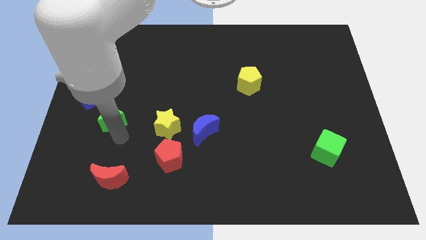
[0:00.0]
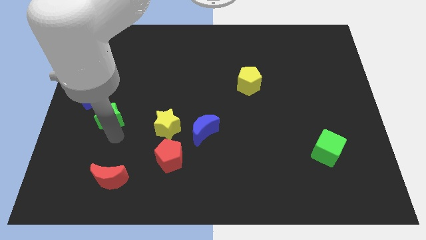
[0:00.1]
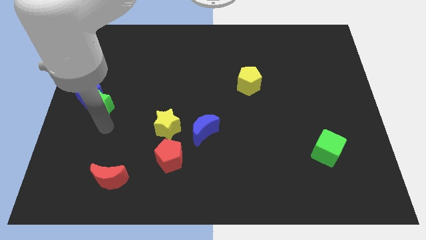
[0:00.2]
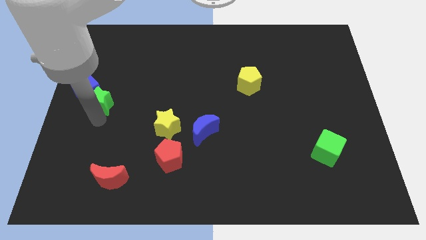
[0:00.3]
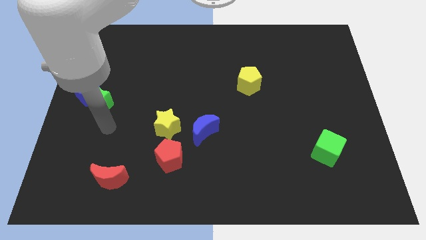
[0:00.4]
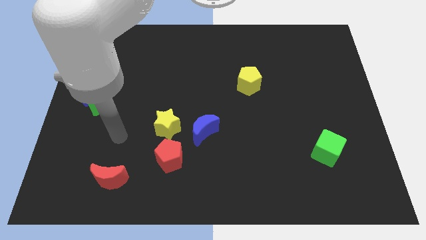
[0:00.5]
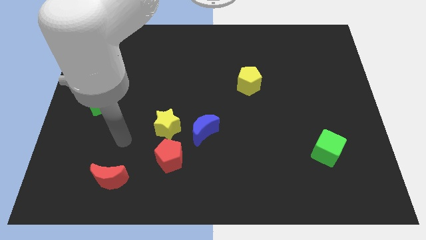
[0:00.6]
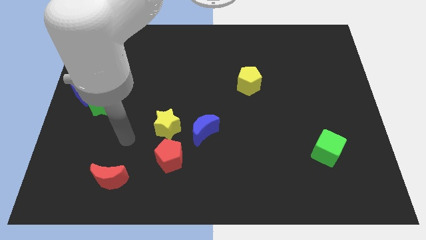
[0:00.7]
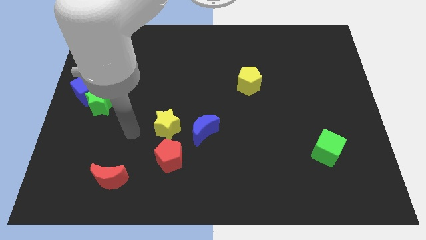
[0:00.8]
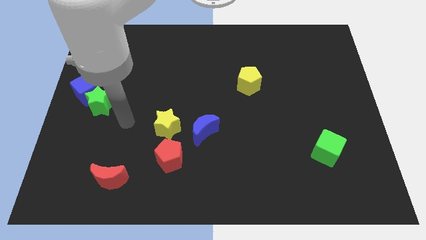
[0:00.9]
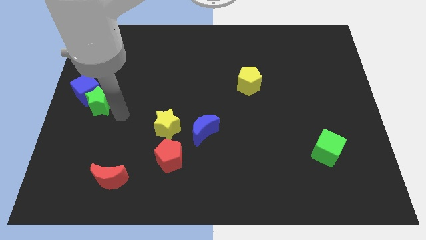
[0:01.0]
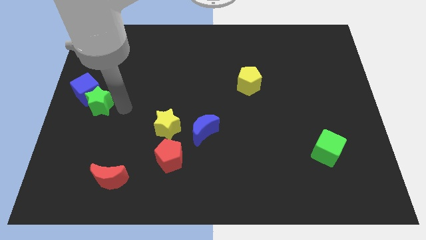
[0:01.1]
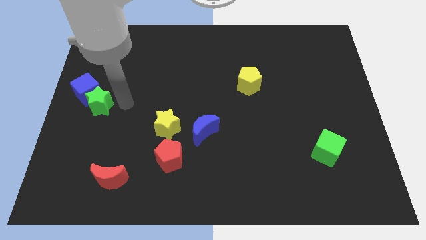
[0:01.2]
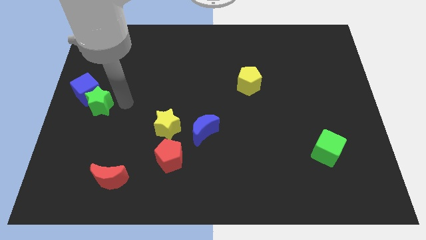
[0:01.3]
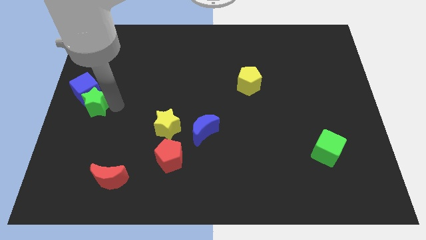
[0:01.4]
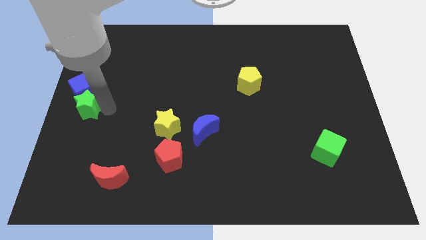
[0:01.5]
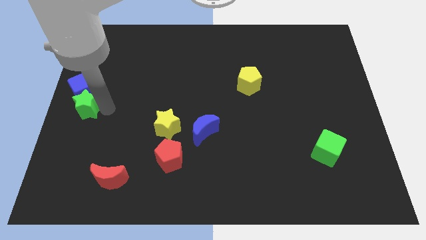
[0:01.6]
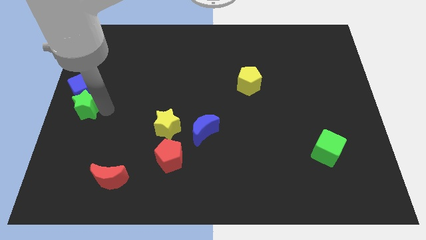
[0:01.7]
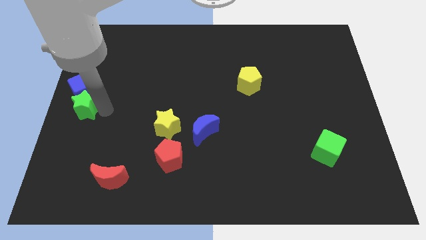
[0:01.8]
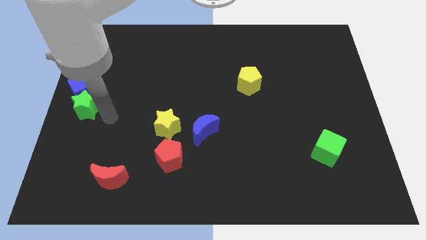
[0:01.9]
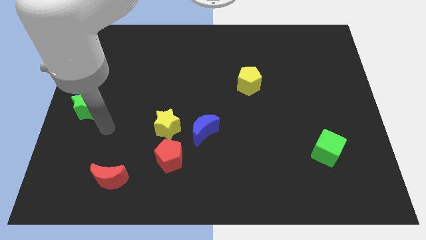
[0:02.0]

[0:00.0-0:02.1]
push the green star to the bottom of the blue cube

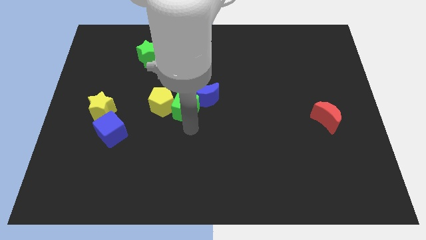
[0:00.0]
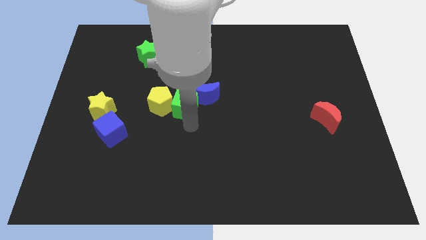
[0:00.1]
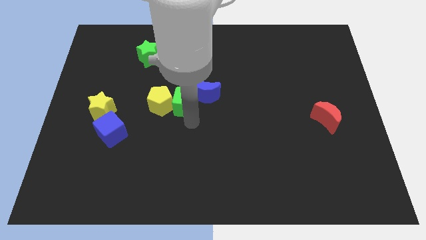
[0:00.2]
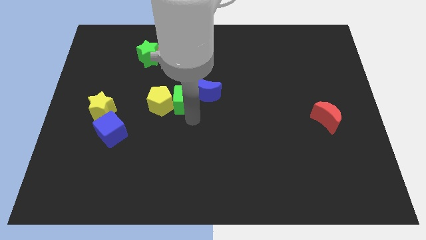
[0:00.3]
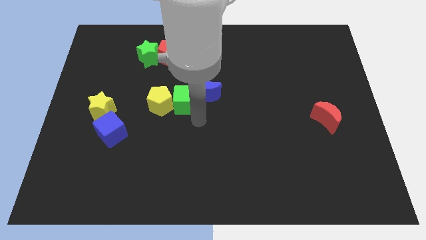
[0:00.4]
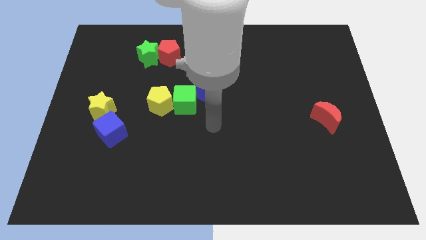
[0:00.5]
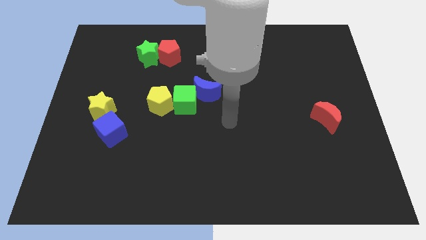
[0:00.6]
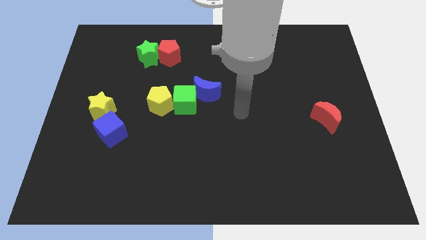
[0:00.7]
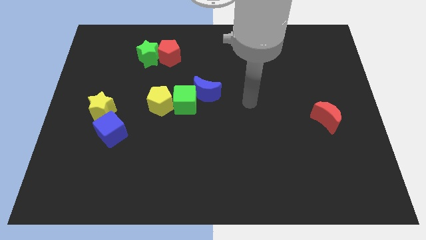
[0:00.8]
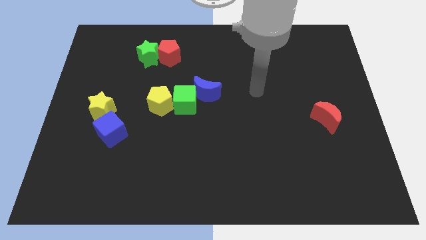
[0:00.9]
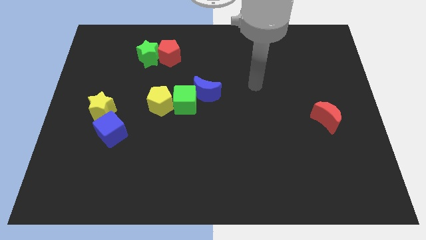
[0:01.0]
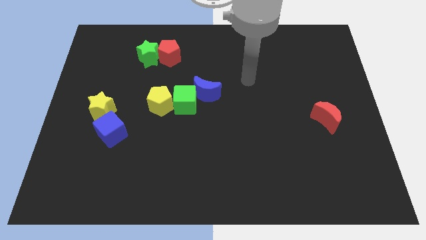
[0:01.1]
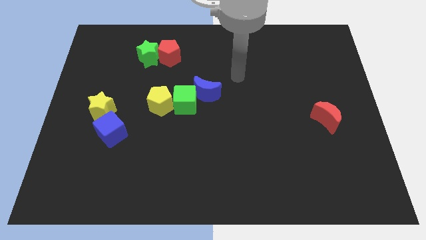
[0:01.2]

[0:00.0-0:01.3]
place the green cube between the yellow pentagon and blue moon

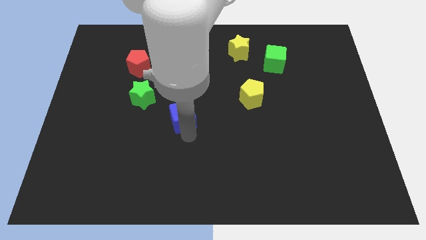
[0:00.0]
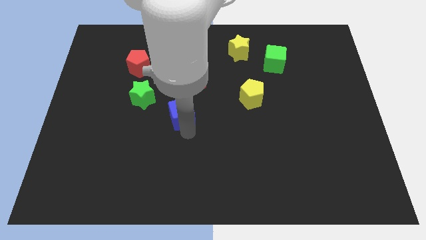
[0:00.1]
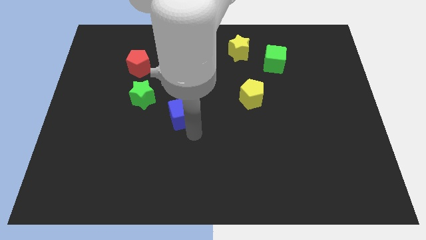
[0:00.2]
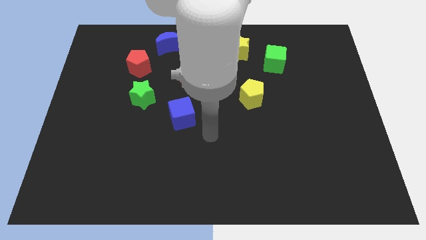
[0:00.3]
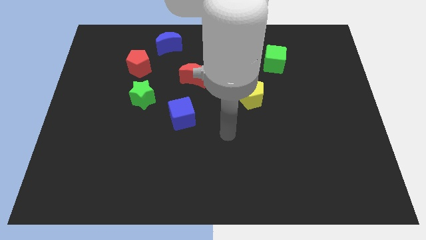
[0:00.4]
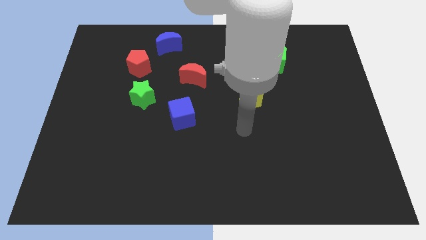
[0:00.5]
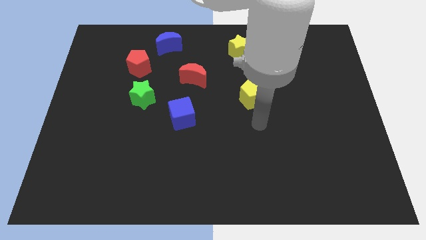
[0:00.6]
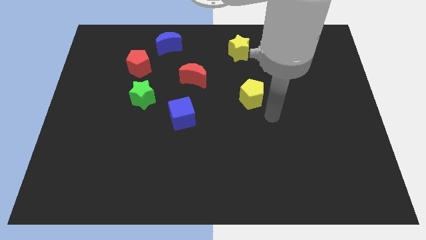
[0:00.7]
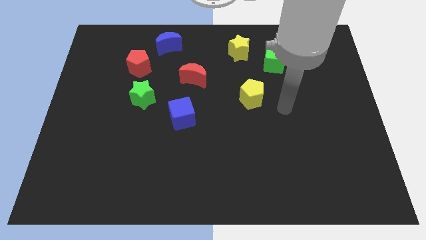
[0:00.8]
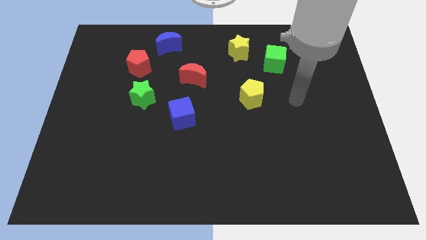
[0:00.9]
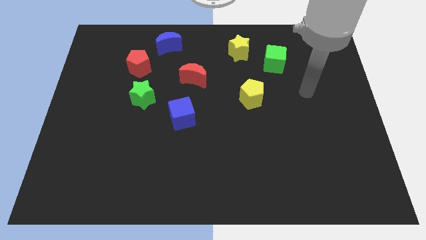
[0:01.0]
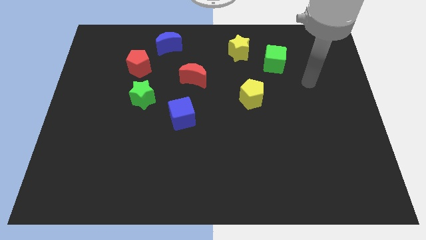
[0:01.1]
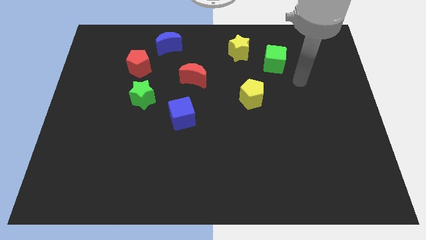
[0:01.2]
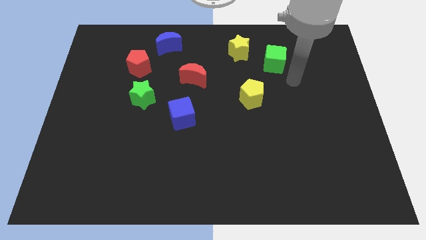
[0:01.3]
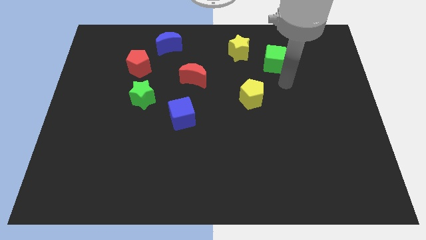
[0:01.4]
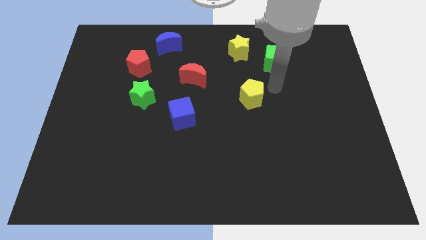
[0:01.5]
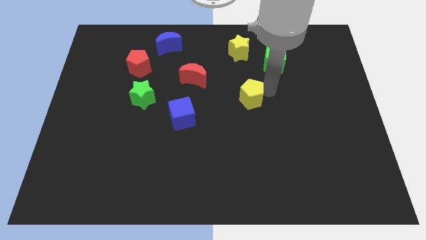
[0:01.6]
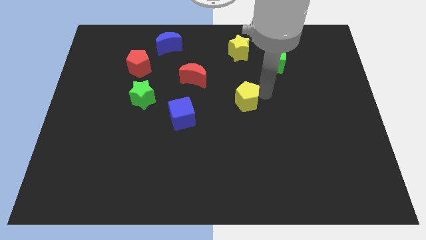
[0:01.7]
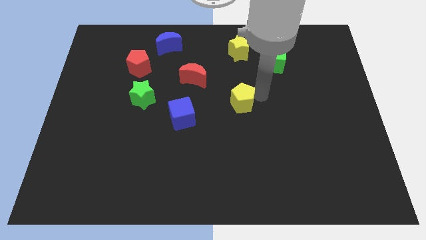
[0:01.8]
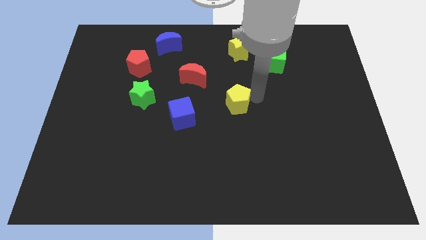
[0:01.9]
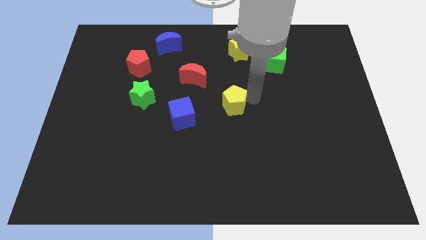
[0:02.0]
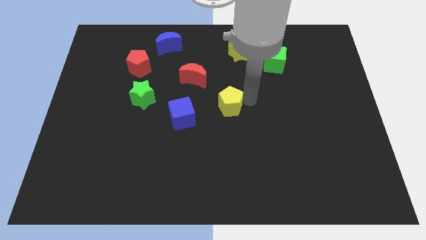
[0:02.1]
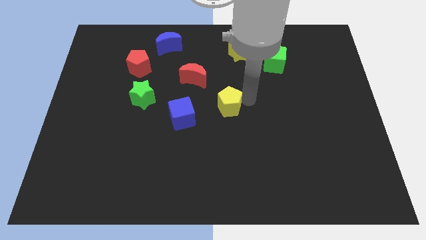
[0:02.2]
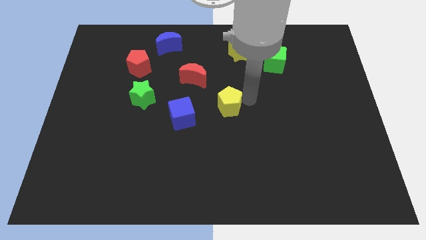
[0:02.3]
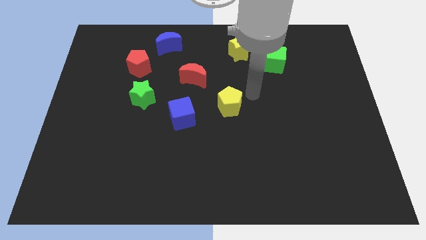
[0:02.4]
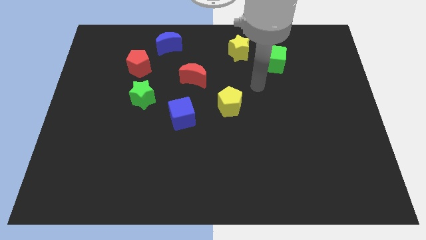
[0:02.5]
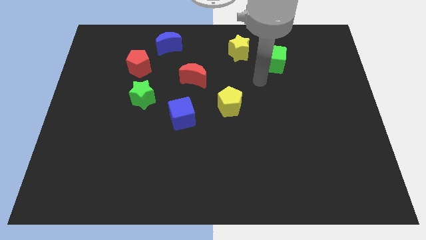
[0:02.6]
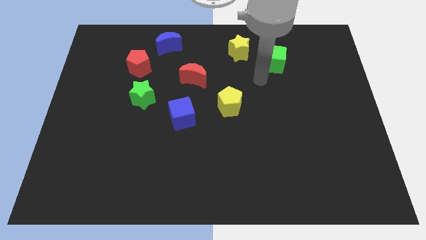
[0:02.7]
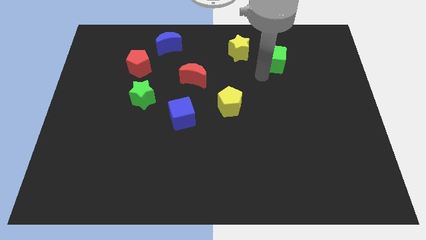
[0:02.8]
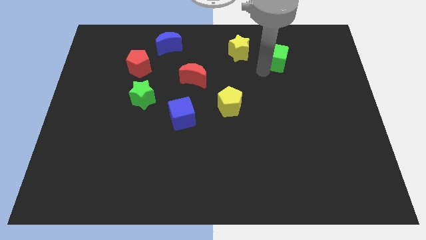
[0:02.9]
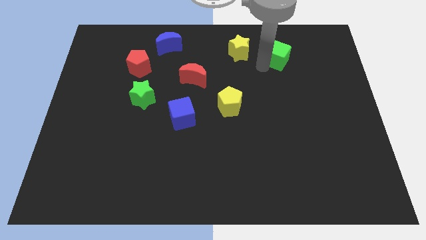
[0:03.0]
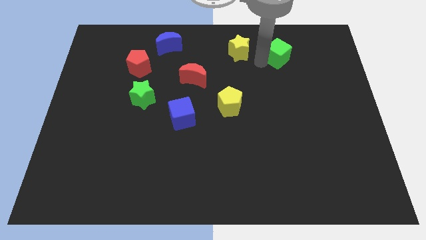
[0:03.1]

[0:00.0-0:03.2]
move the yellow pentagon right side of the blue cube

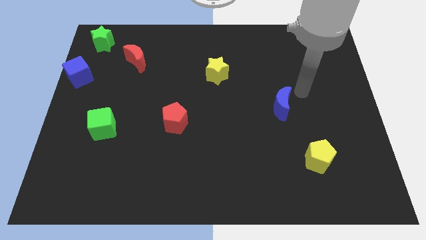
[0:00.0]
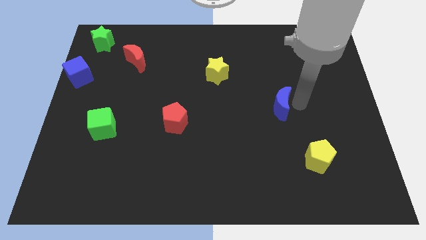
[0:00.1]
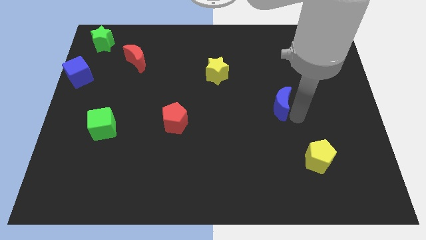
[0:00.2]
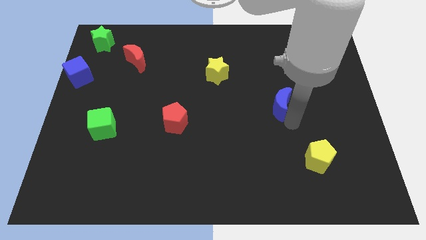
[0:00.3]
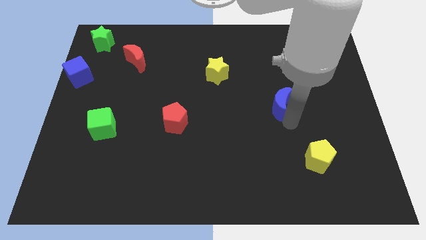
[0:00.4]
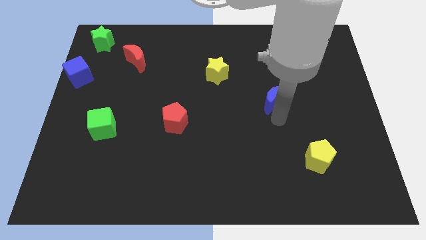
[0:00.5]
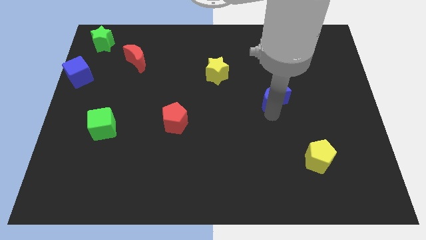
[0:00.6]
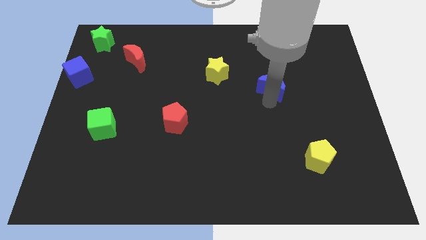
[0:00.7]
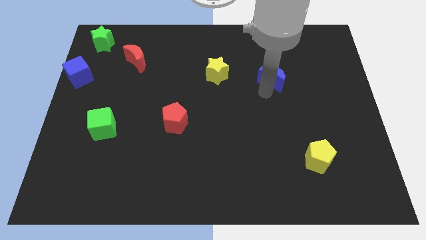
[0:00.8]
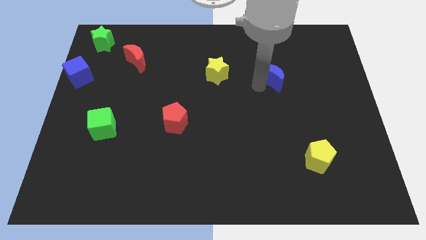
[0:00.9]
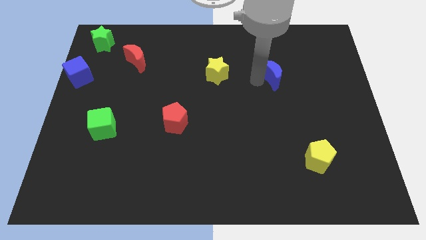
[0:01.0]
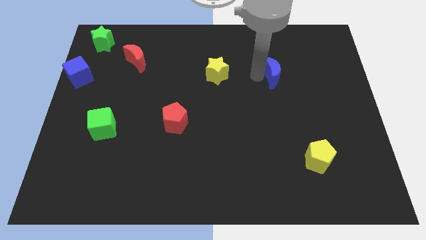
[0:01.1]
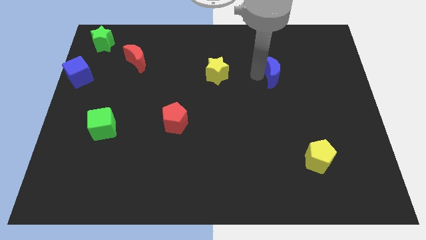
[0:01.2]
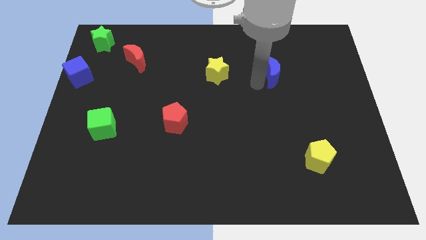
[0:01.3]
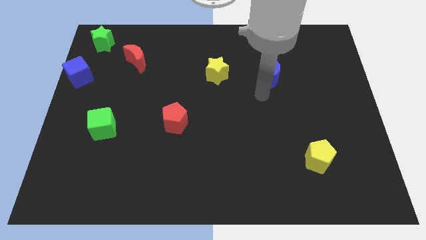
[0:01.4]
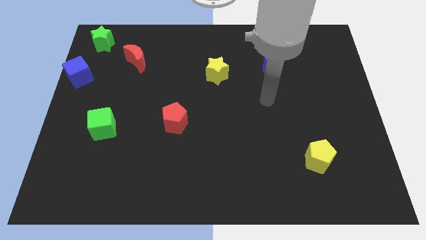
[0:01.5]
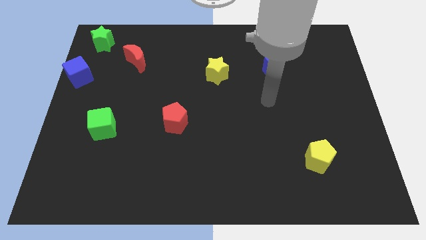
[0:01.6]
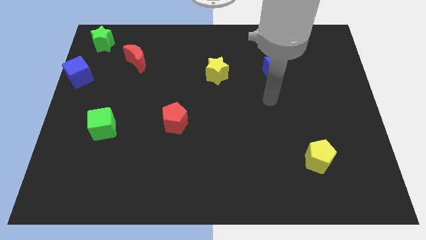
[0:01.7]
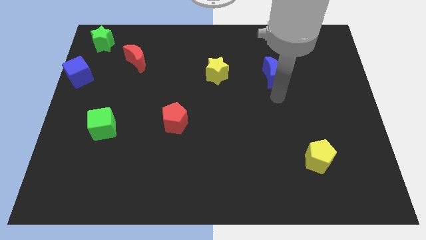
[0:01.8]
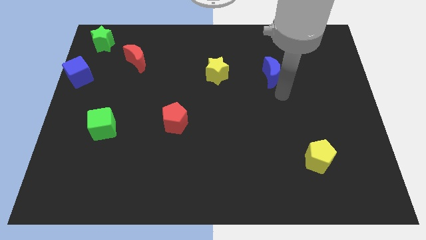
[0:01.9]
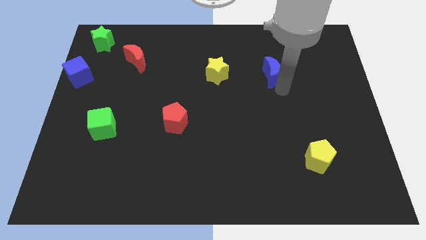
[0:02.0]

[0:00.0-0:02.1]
move the bleu crescent to the right of yellow star
